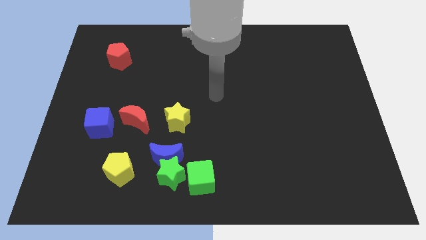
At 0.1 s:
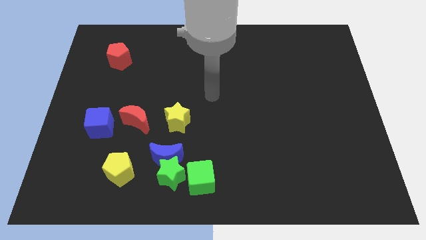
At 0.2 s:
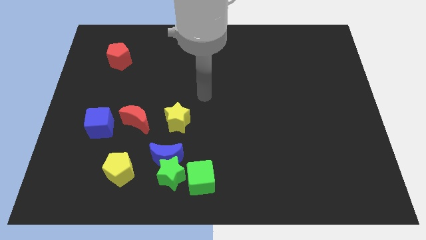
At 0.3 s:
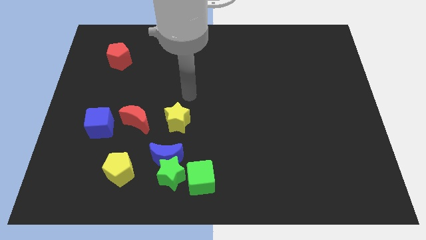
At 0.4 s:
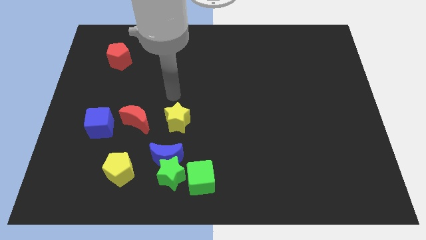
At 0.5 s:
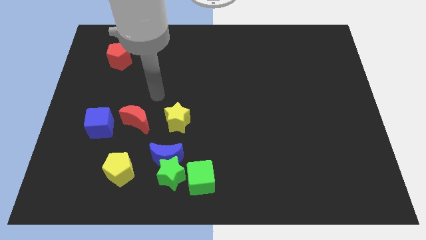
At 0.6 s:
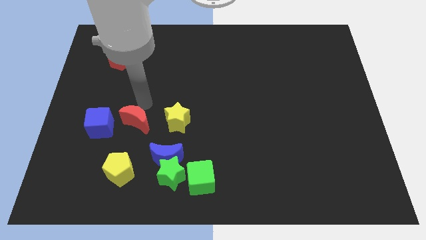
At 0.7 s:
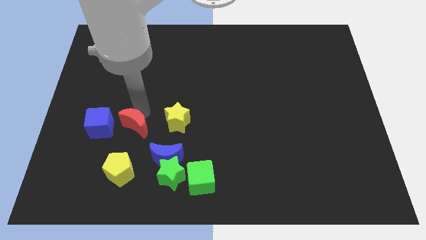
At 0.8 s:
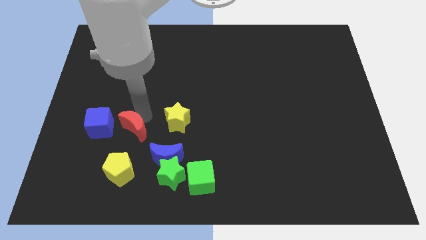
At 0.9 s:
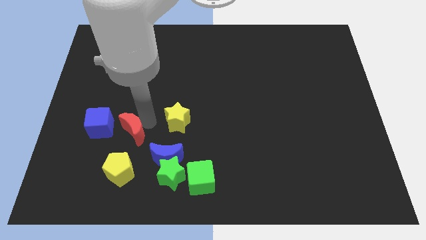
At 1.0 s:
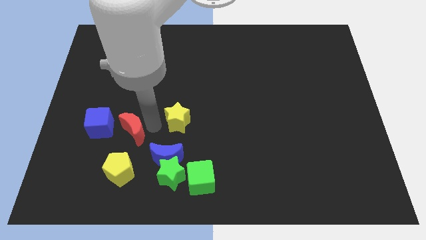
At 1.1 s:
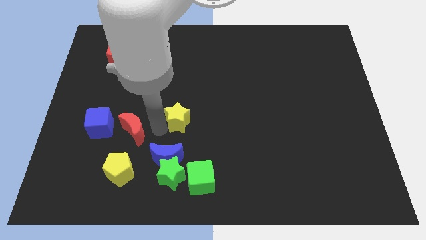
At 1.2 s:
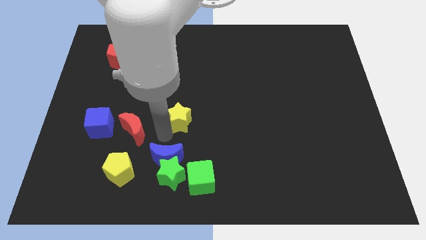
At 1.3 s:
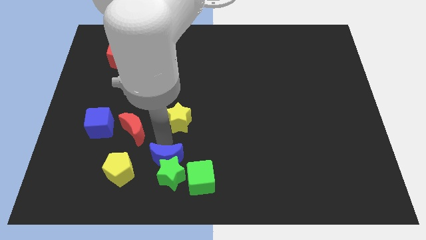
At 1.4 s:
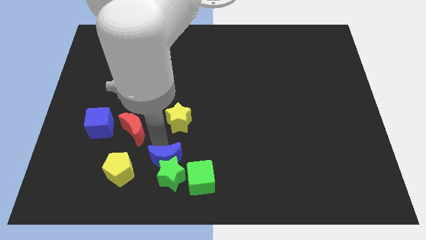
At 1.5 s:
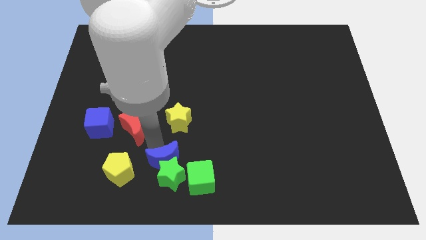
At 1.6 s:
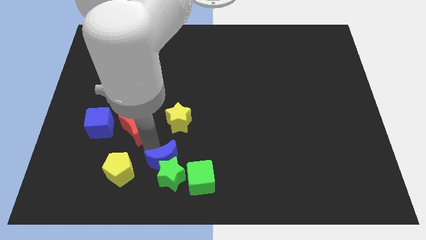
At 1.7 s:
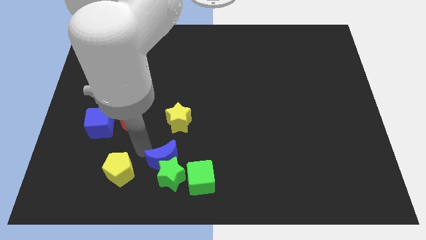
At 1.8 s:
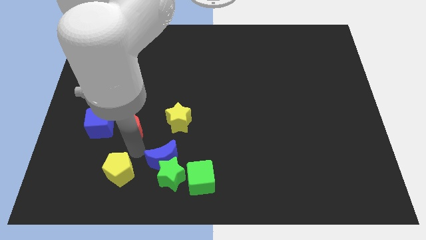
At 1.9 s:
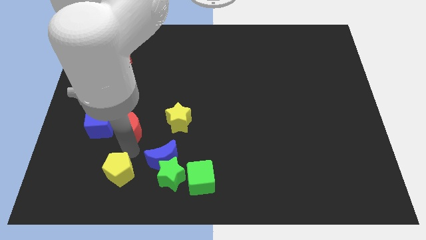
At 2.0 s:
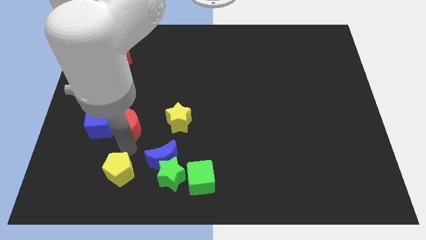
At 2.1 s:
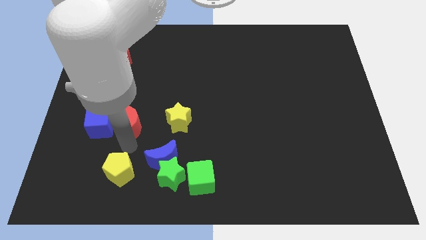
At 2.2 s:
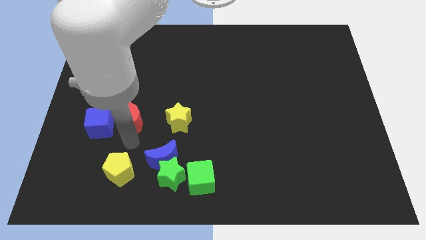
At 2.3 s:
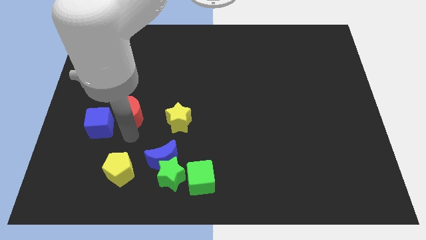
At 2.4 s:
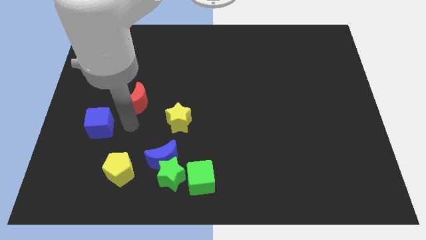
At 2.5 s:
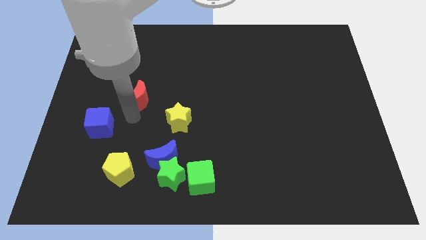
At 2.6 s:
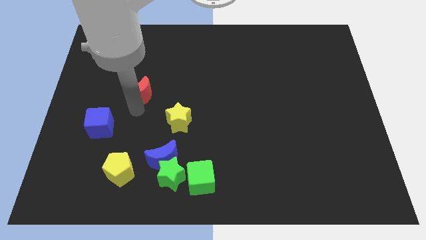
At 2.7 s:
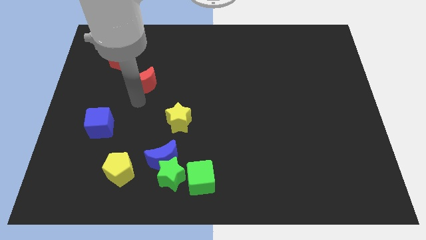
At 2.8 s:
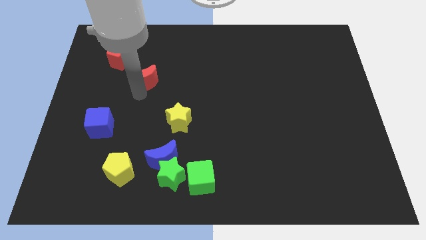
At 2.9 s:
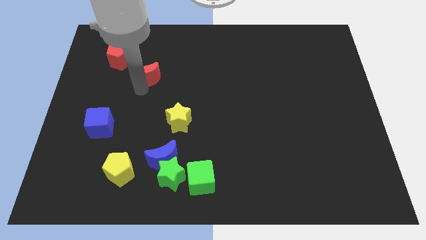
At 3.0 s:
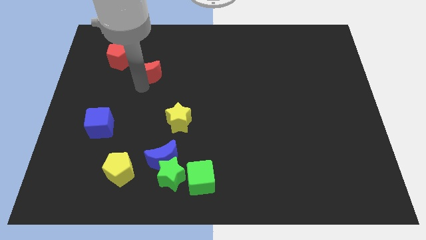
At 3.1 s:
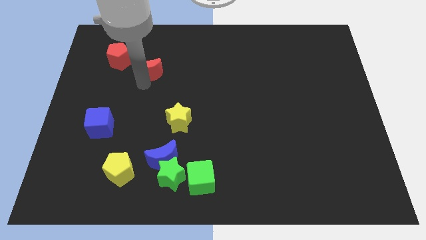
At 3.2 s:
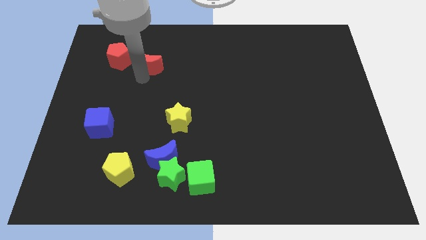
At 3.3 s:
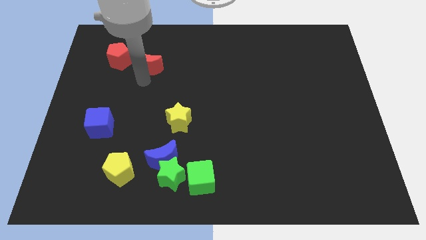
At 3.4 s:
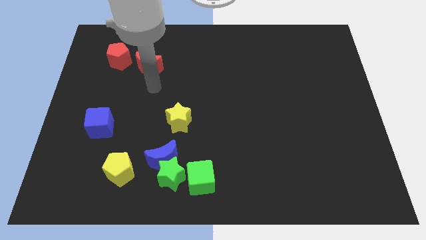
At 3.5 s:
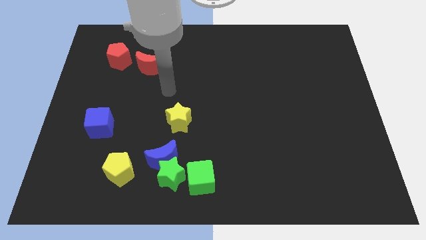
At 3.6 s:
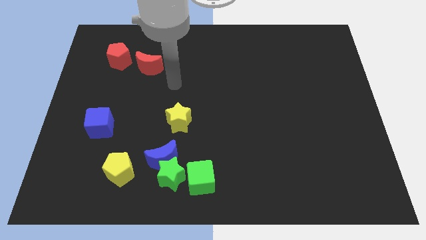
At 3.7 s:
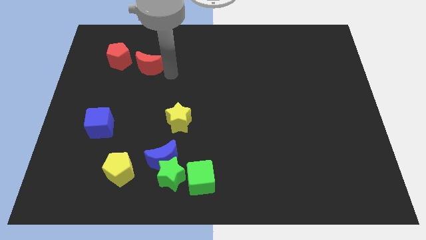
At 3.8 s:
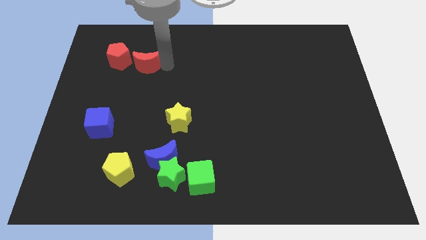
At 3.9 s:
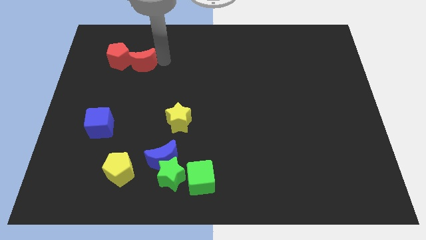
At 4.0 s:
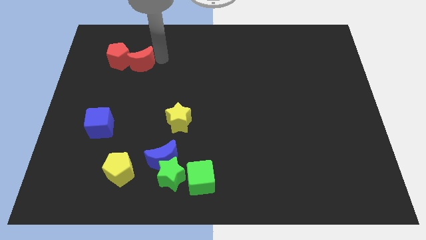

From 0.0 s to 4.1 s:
place red moon to the right side of the red pentagon

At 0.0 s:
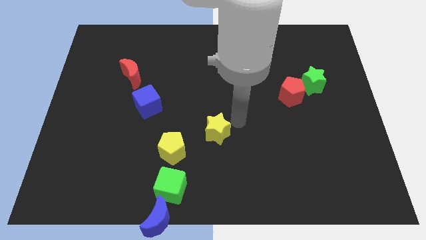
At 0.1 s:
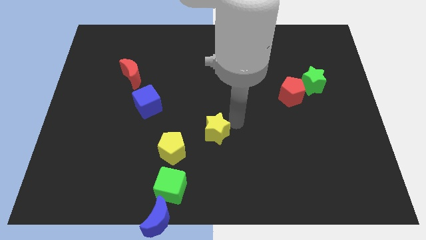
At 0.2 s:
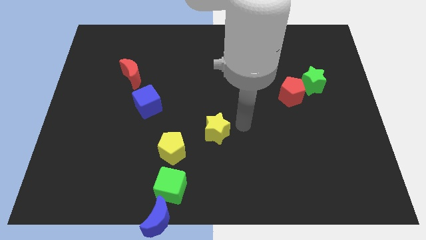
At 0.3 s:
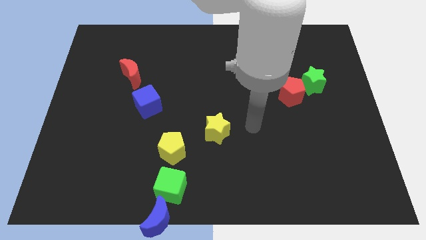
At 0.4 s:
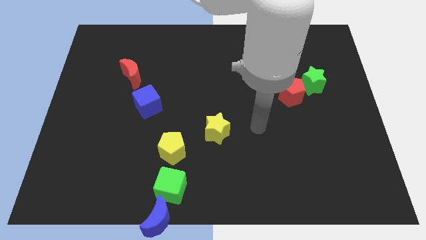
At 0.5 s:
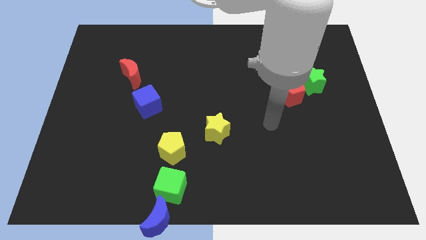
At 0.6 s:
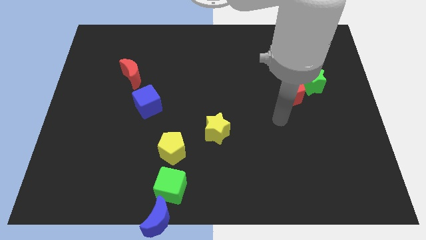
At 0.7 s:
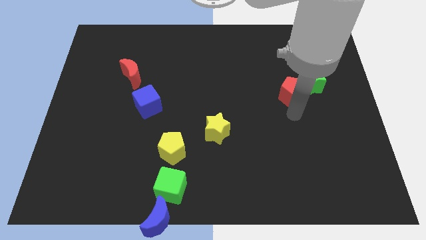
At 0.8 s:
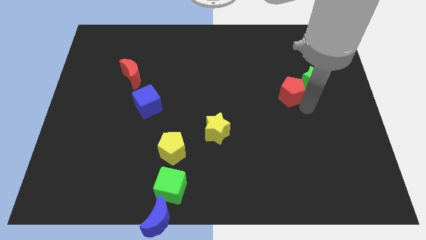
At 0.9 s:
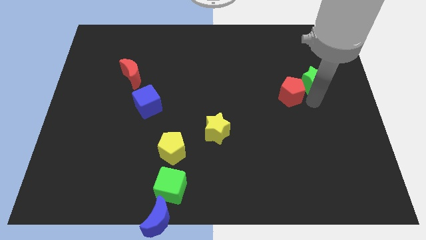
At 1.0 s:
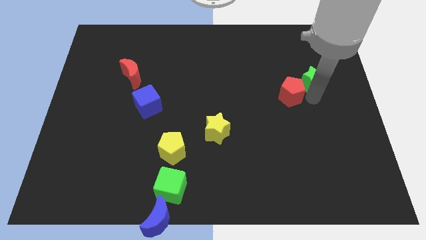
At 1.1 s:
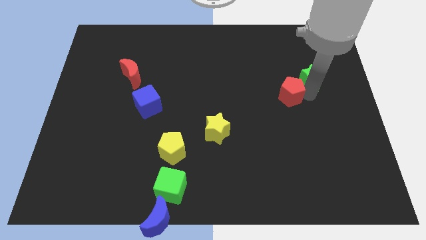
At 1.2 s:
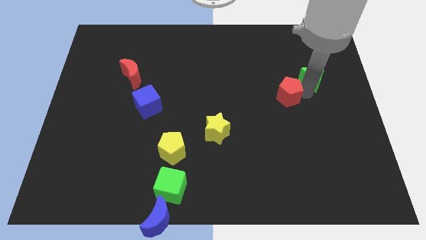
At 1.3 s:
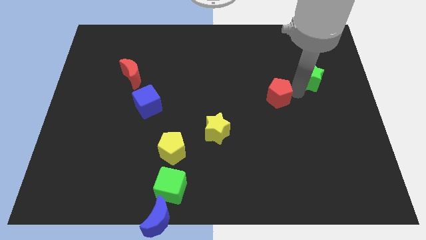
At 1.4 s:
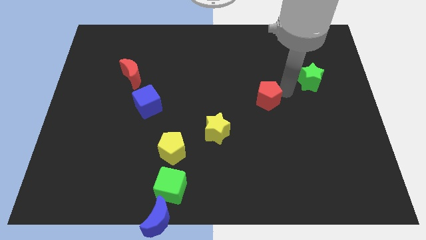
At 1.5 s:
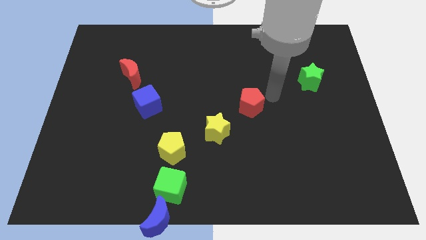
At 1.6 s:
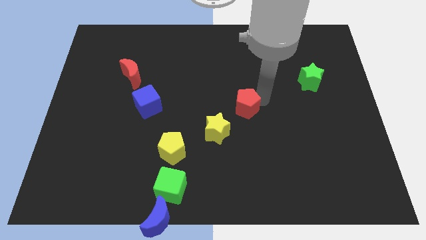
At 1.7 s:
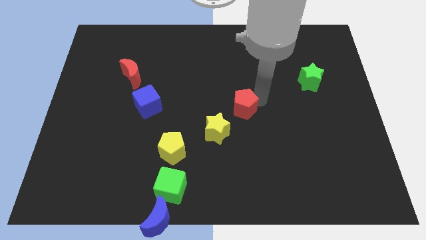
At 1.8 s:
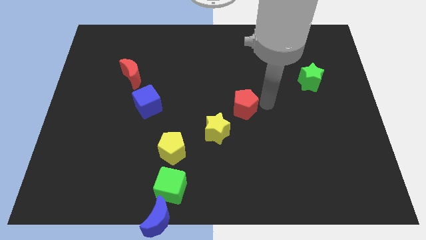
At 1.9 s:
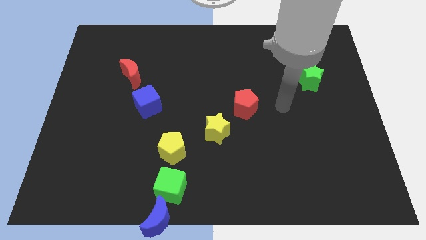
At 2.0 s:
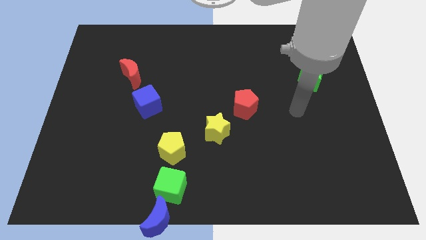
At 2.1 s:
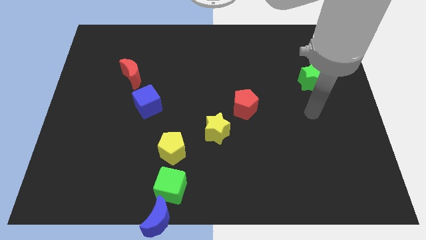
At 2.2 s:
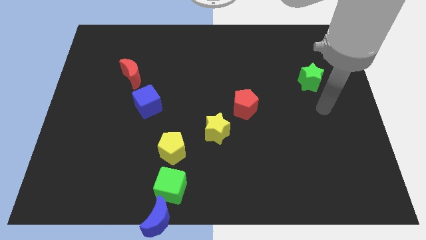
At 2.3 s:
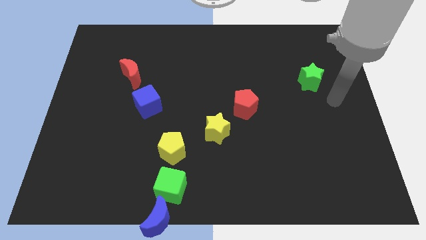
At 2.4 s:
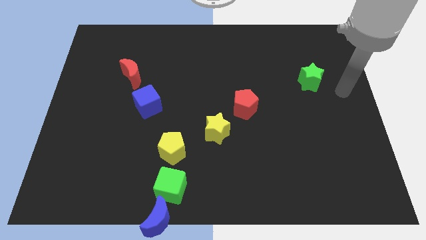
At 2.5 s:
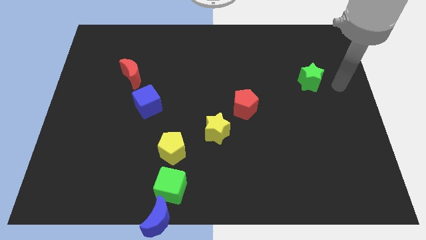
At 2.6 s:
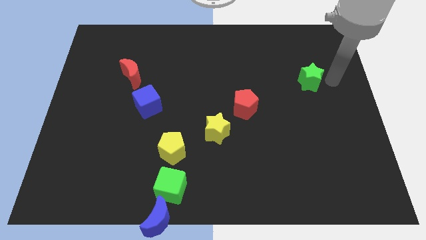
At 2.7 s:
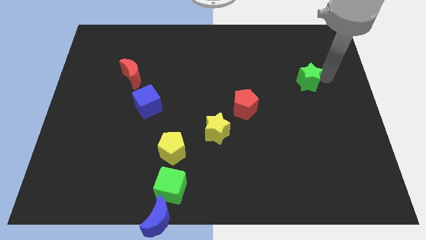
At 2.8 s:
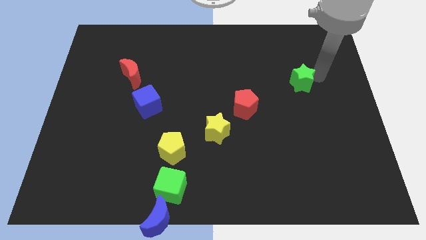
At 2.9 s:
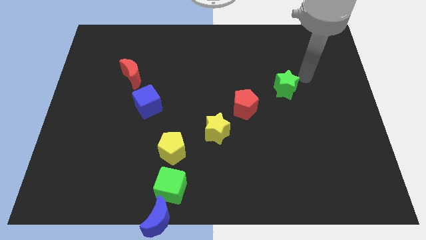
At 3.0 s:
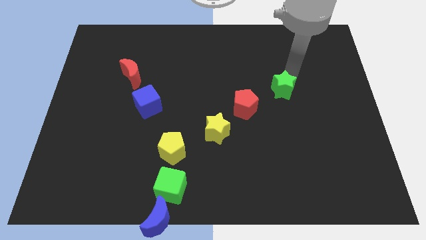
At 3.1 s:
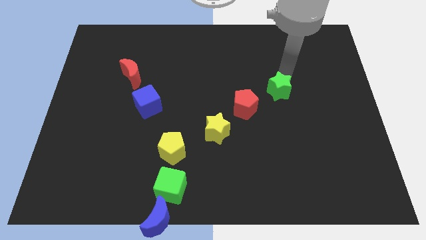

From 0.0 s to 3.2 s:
separate the red pentagon from green star

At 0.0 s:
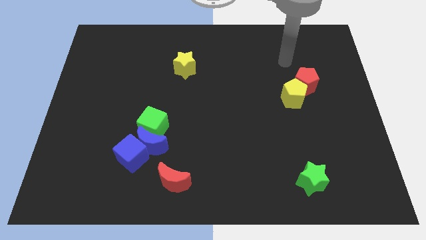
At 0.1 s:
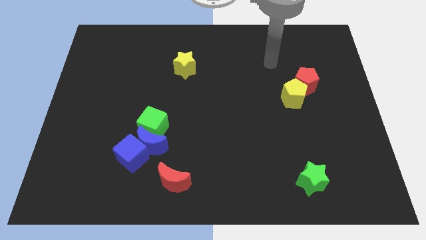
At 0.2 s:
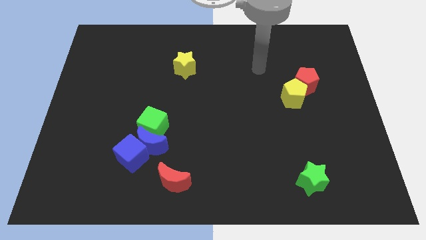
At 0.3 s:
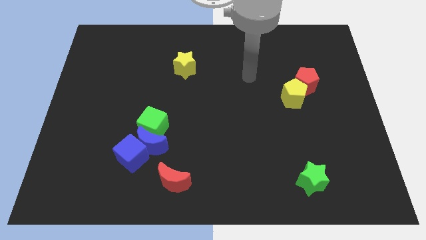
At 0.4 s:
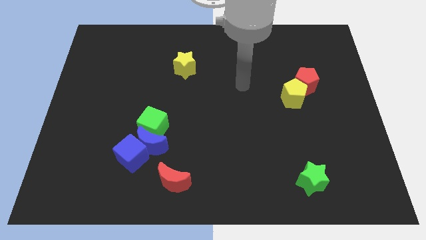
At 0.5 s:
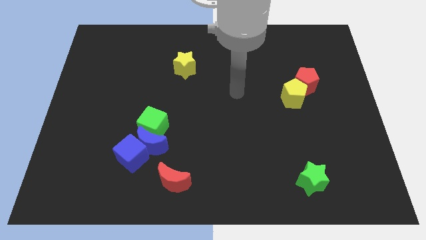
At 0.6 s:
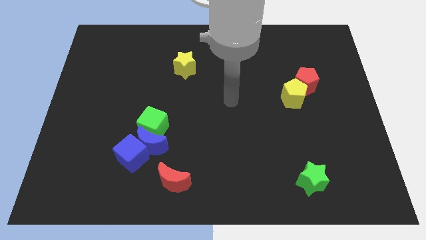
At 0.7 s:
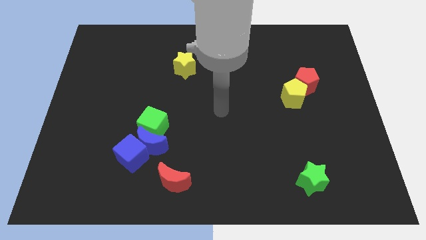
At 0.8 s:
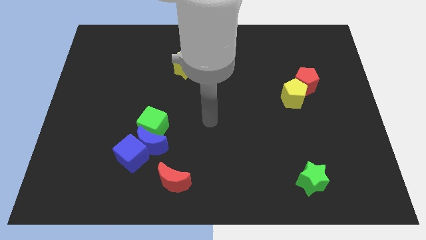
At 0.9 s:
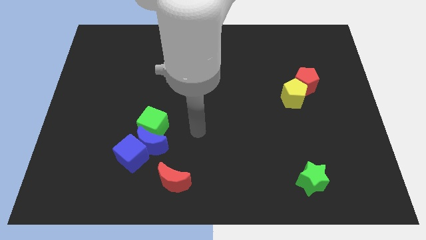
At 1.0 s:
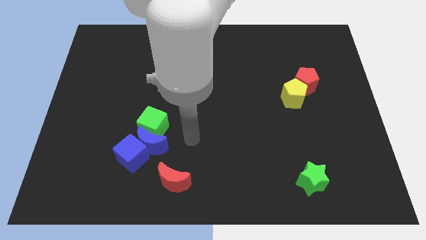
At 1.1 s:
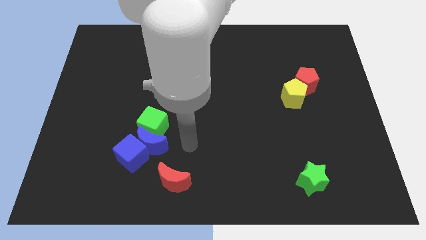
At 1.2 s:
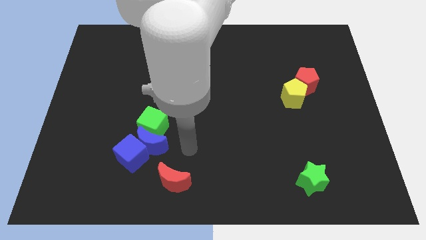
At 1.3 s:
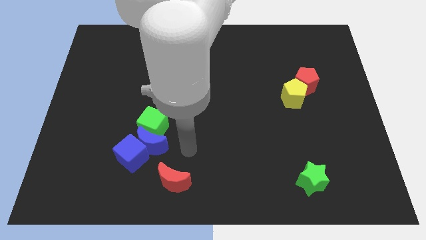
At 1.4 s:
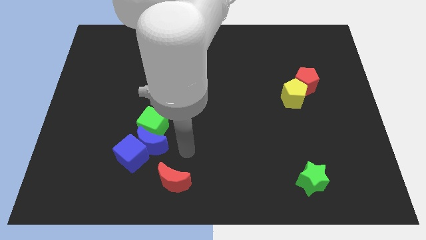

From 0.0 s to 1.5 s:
move your arm to the top of the red moon
